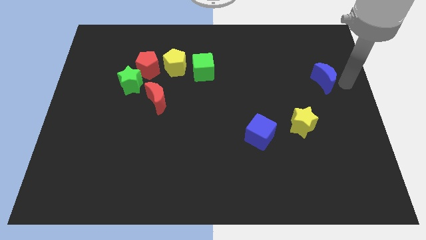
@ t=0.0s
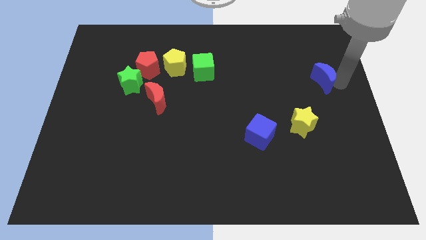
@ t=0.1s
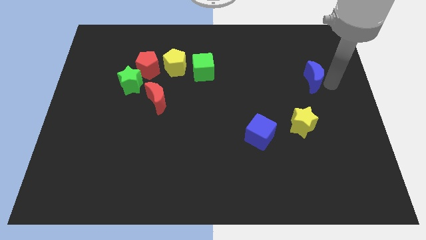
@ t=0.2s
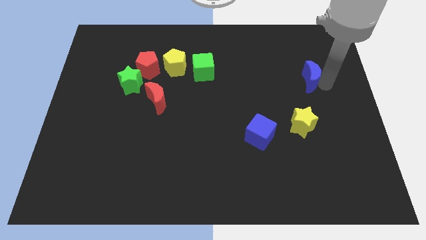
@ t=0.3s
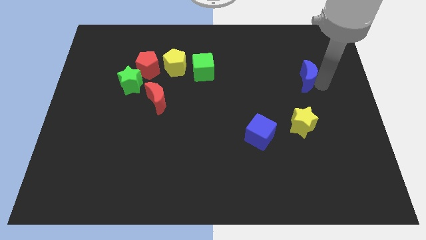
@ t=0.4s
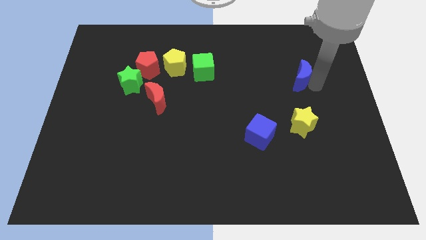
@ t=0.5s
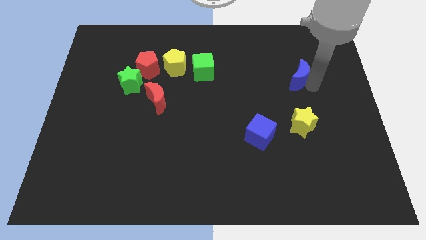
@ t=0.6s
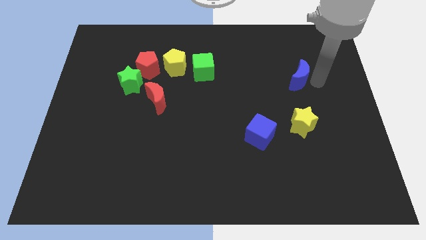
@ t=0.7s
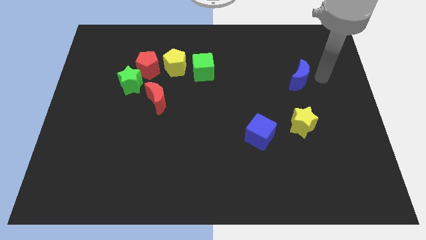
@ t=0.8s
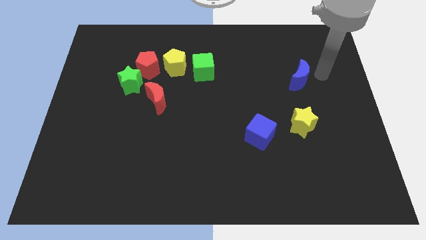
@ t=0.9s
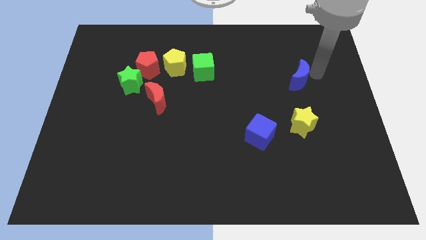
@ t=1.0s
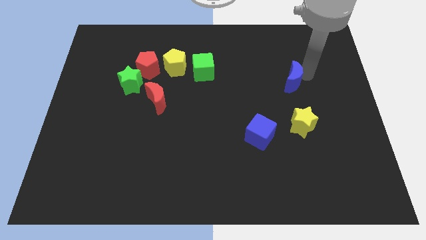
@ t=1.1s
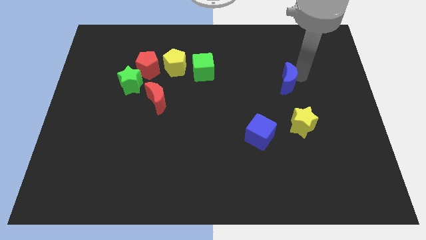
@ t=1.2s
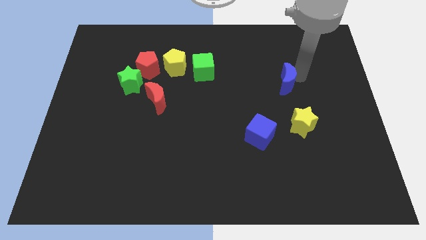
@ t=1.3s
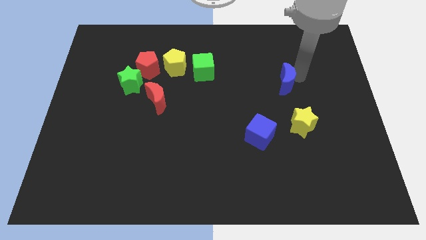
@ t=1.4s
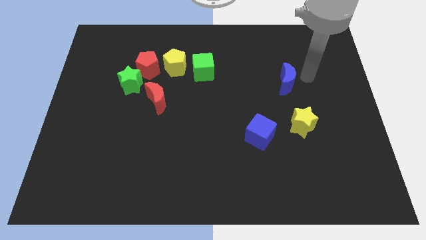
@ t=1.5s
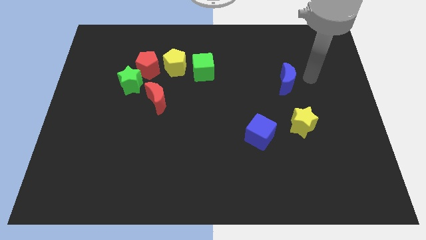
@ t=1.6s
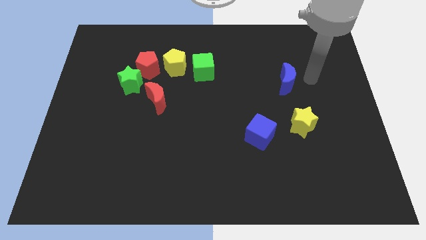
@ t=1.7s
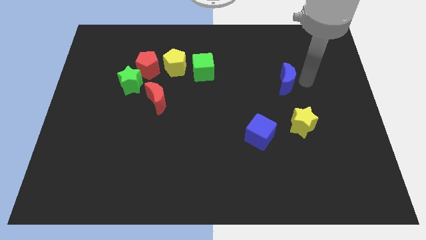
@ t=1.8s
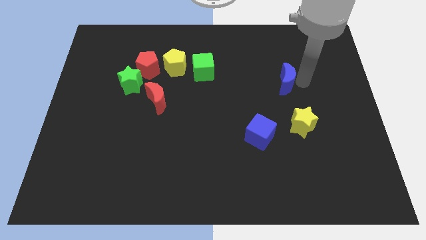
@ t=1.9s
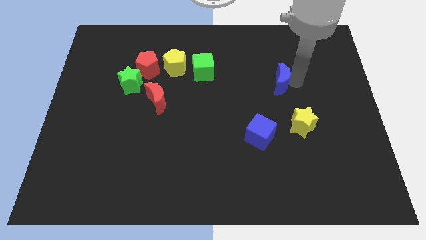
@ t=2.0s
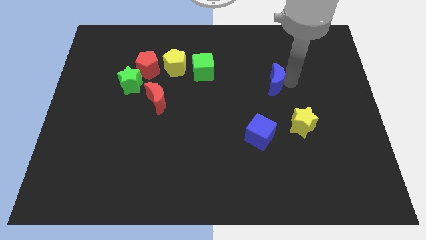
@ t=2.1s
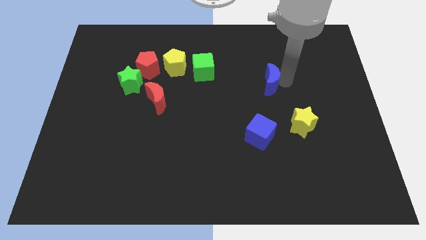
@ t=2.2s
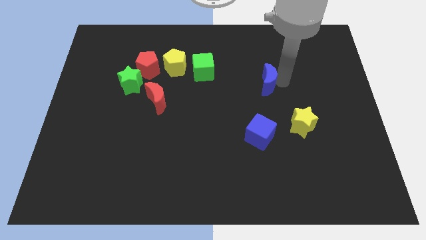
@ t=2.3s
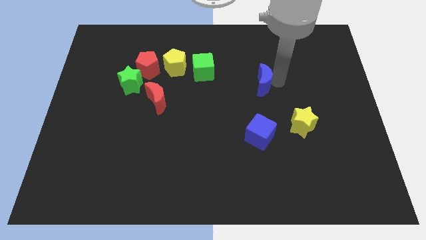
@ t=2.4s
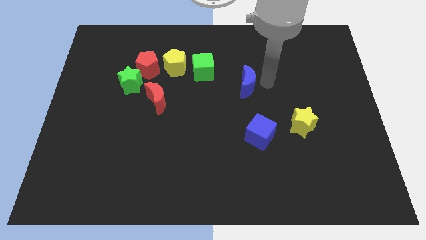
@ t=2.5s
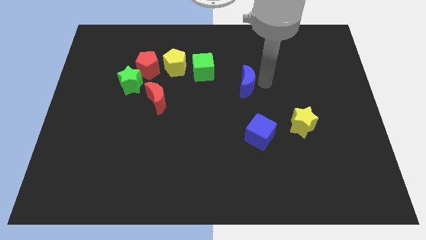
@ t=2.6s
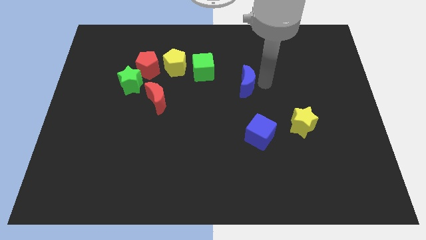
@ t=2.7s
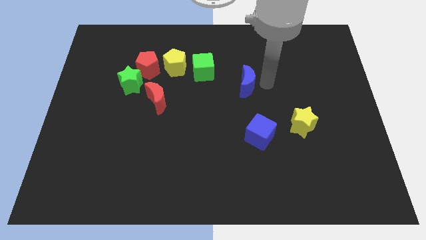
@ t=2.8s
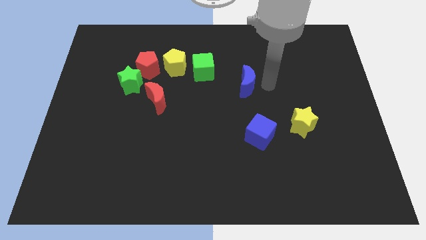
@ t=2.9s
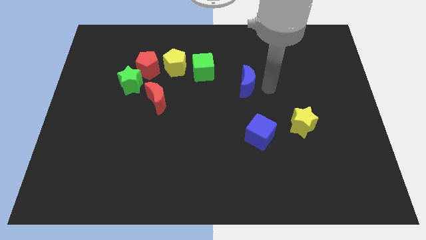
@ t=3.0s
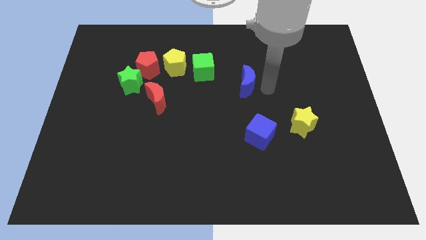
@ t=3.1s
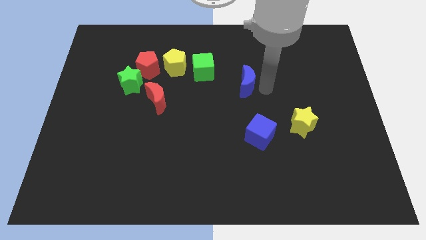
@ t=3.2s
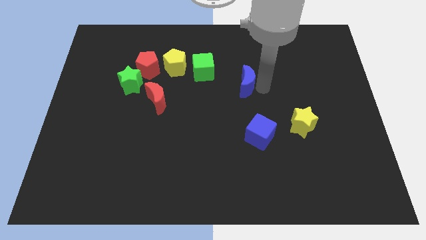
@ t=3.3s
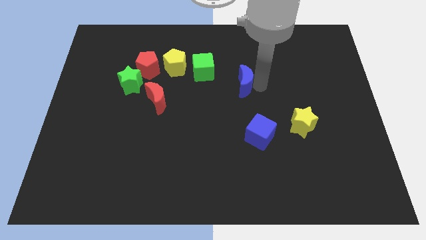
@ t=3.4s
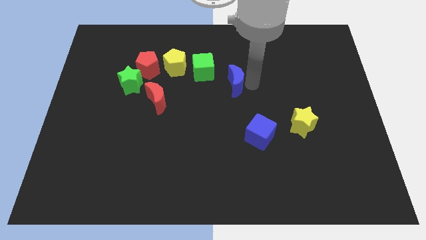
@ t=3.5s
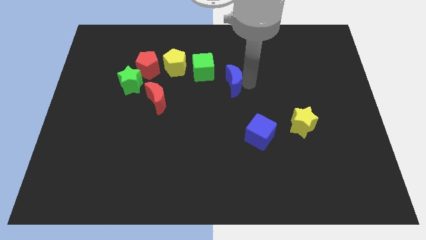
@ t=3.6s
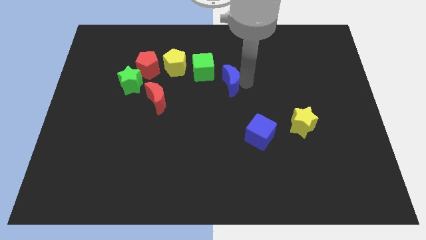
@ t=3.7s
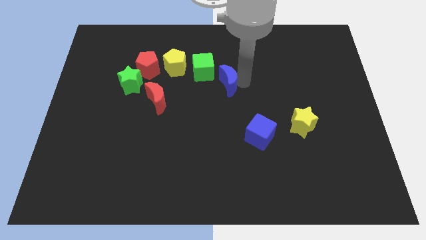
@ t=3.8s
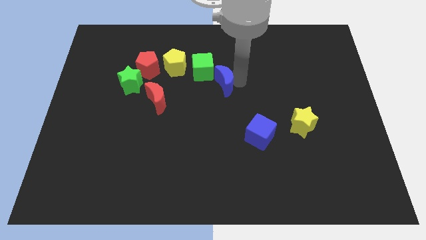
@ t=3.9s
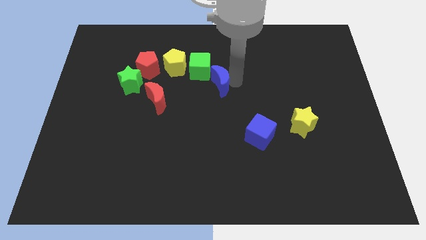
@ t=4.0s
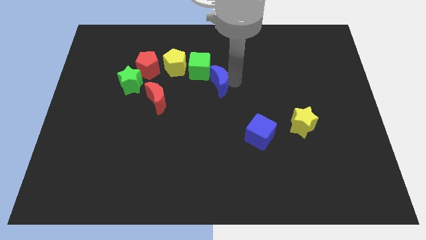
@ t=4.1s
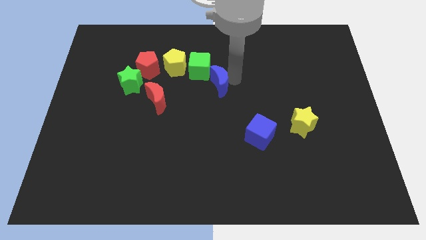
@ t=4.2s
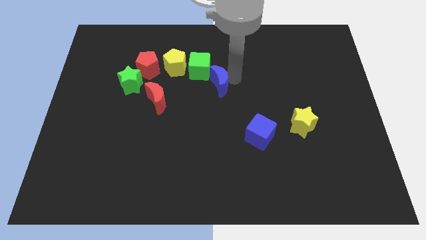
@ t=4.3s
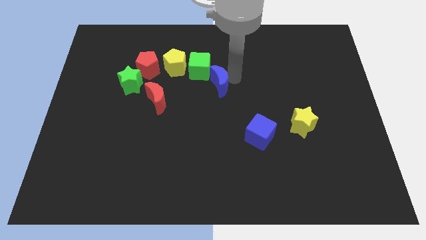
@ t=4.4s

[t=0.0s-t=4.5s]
push the blue crescent into the green cube

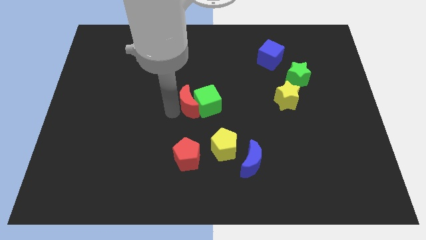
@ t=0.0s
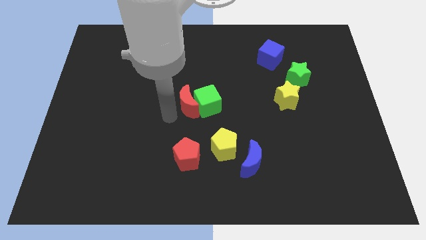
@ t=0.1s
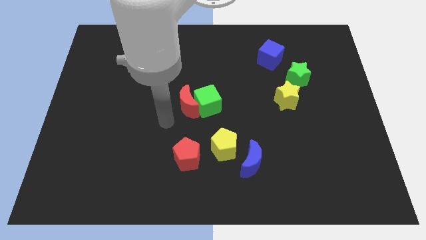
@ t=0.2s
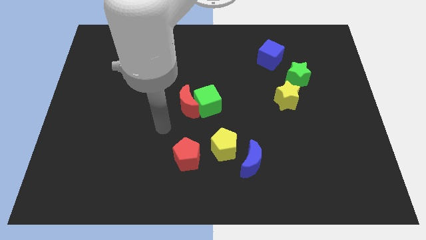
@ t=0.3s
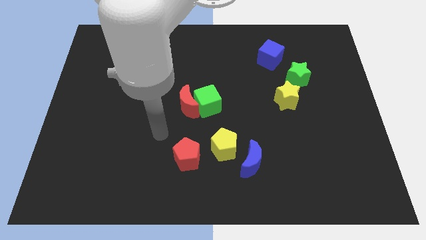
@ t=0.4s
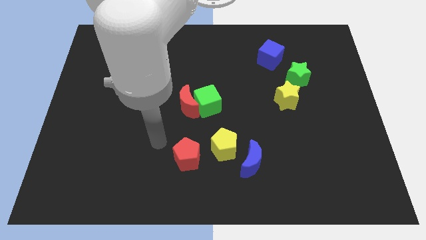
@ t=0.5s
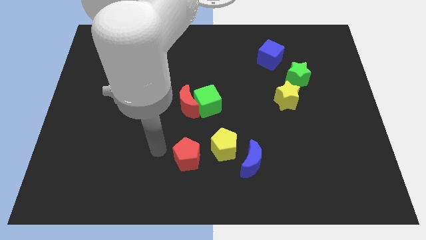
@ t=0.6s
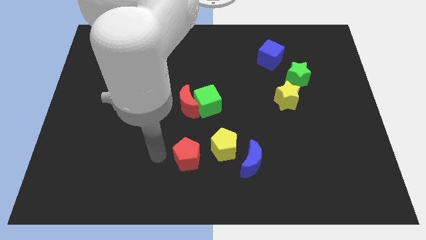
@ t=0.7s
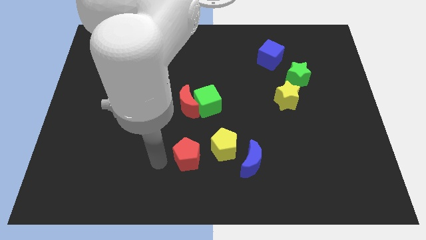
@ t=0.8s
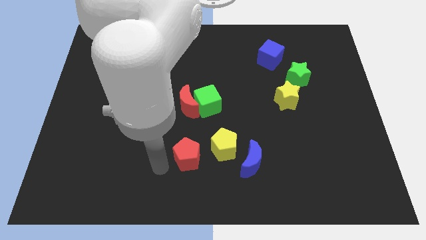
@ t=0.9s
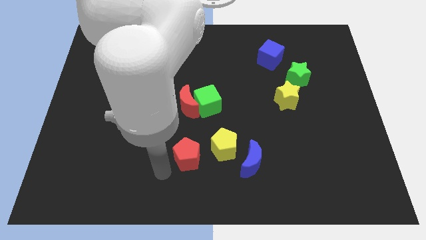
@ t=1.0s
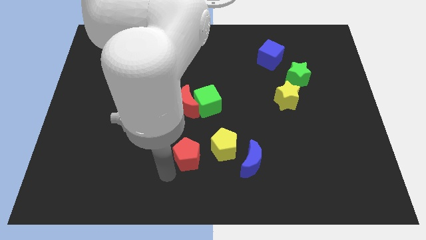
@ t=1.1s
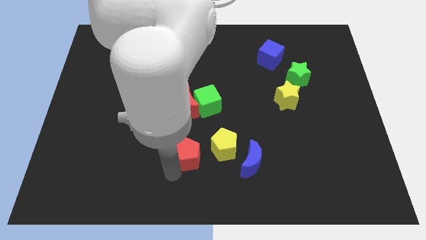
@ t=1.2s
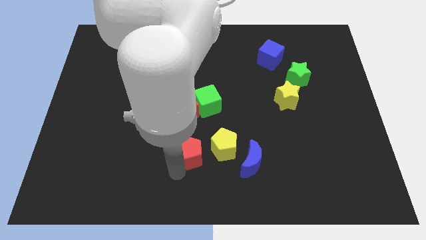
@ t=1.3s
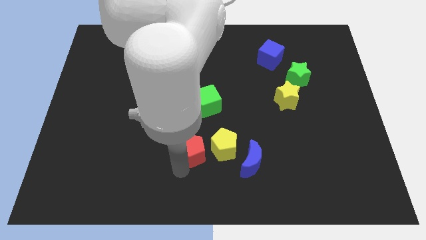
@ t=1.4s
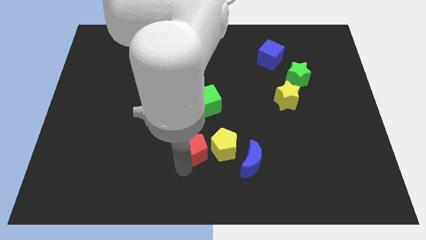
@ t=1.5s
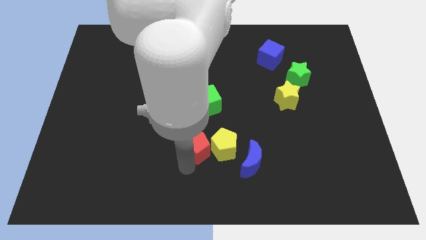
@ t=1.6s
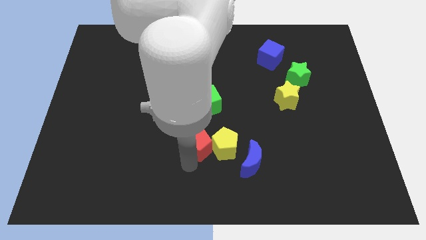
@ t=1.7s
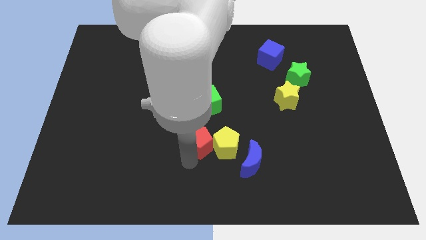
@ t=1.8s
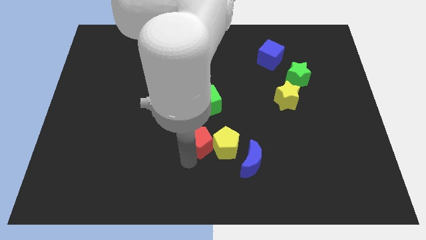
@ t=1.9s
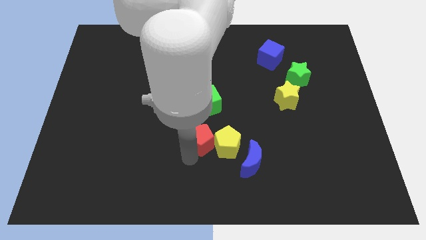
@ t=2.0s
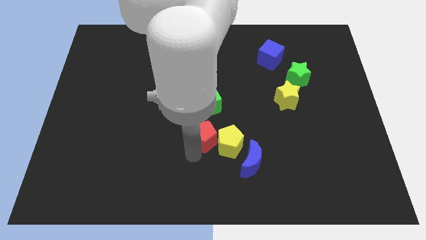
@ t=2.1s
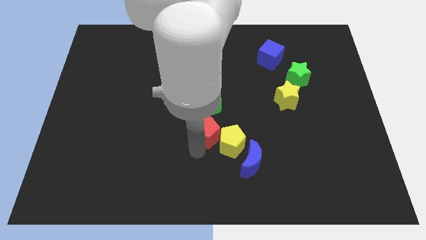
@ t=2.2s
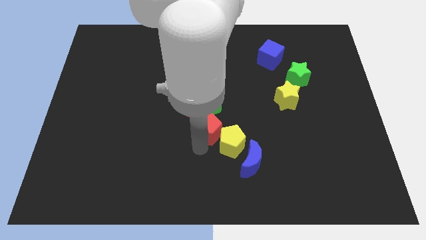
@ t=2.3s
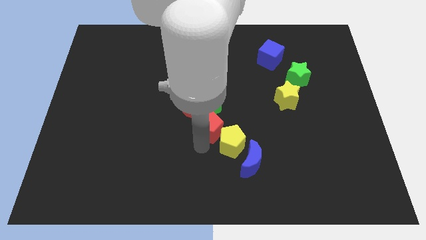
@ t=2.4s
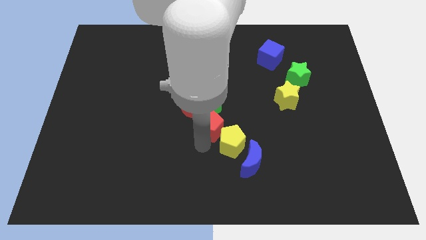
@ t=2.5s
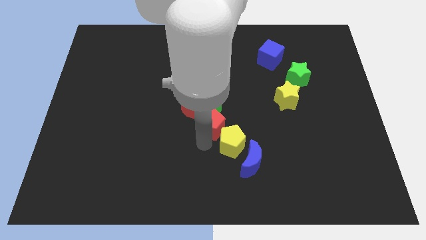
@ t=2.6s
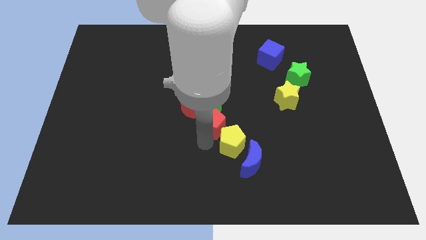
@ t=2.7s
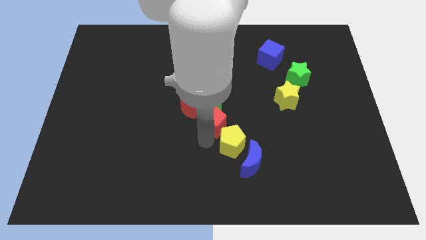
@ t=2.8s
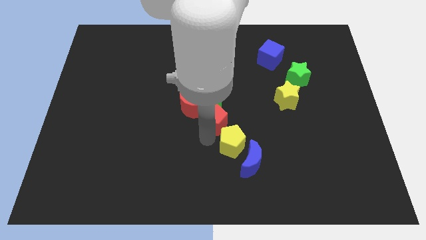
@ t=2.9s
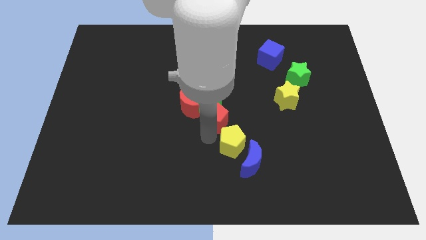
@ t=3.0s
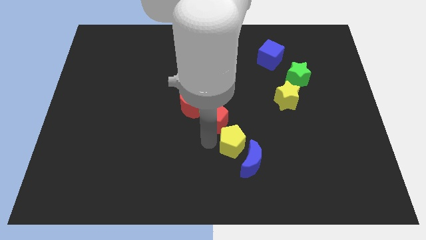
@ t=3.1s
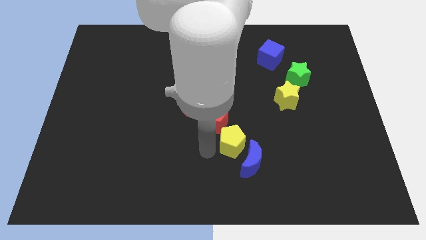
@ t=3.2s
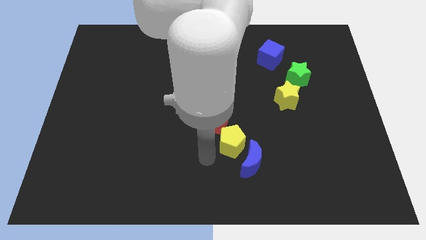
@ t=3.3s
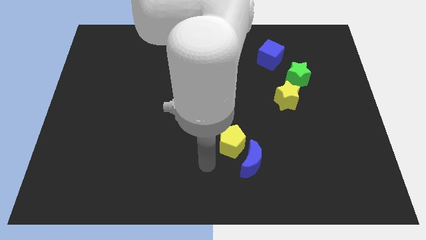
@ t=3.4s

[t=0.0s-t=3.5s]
place the red pentagon to the bottom of the yellow pentagon

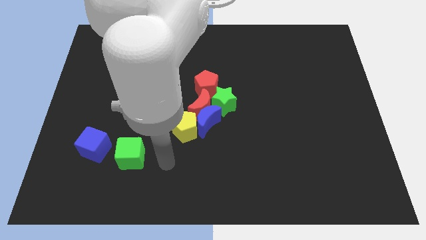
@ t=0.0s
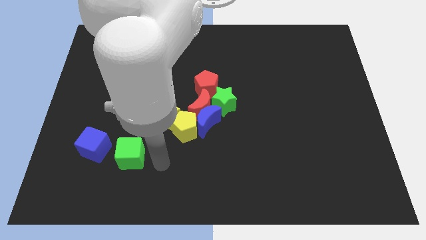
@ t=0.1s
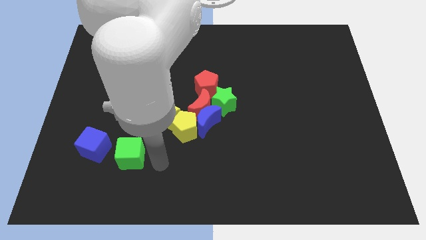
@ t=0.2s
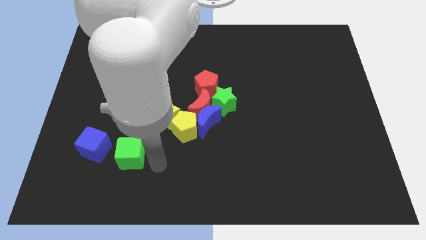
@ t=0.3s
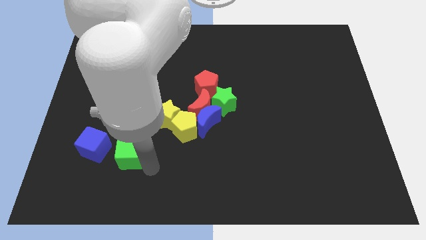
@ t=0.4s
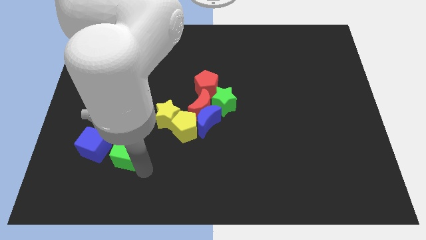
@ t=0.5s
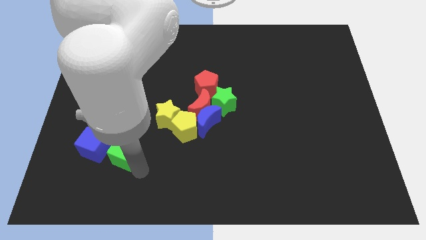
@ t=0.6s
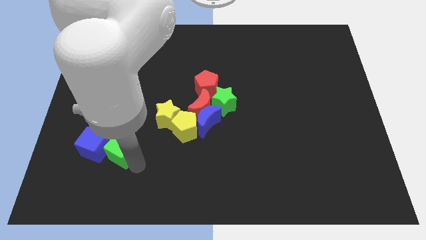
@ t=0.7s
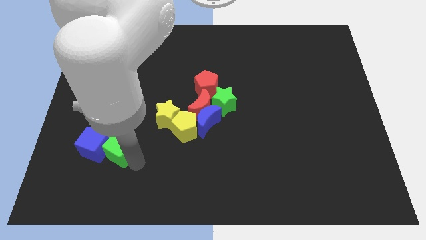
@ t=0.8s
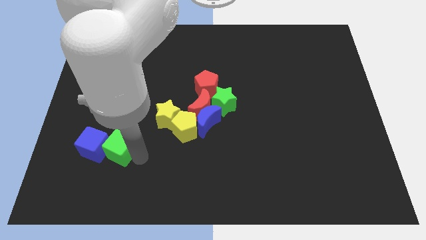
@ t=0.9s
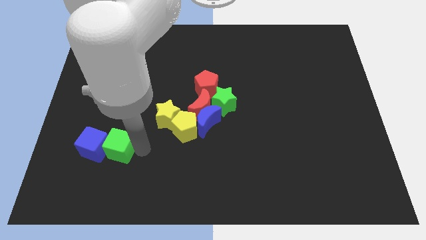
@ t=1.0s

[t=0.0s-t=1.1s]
move the green cube close to the blue cube
